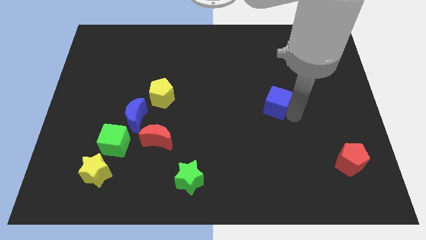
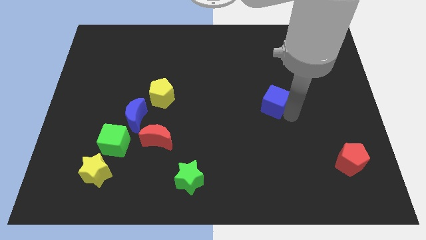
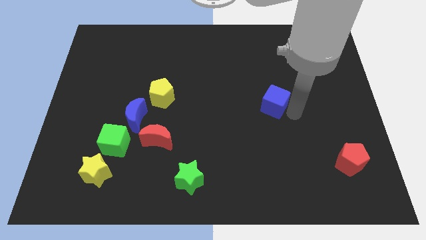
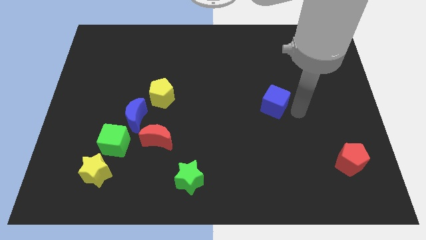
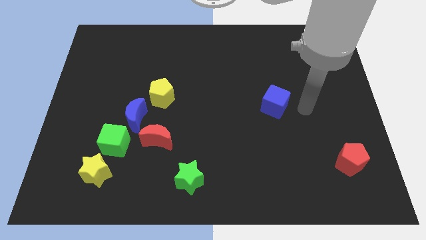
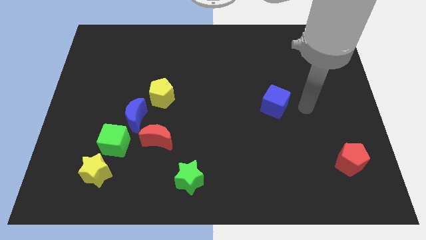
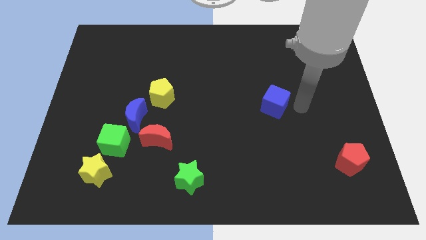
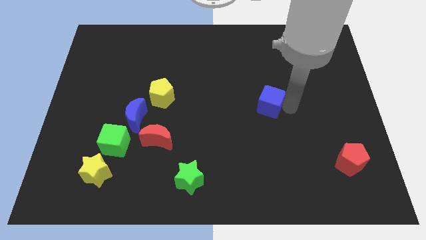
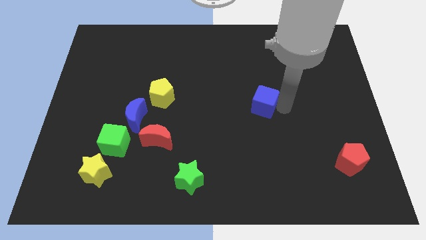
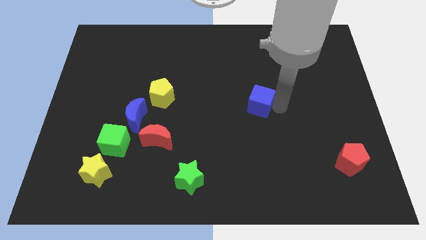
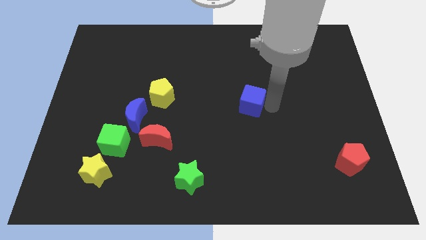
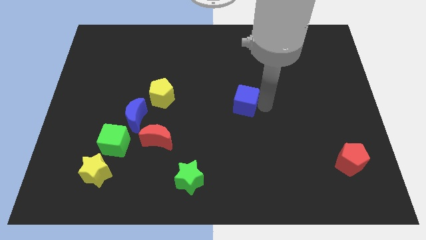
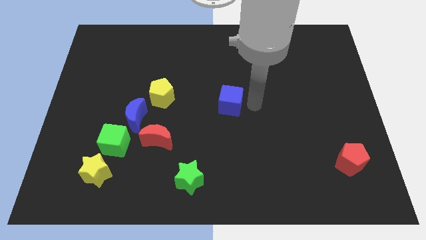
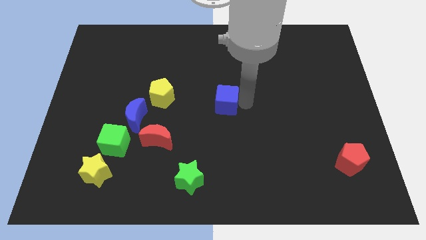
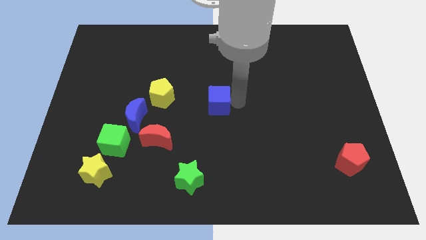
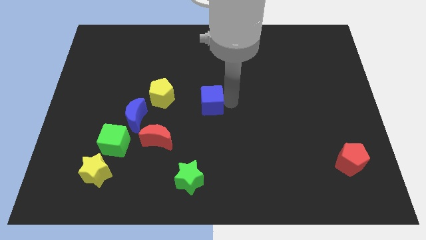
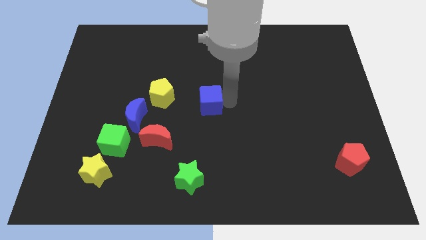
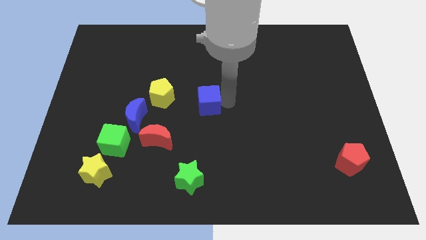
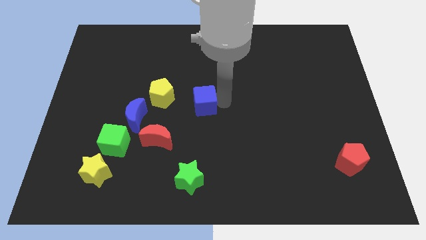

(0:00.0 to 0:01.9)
move the blue cube to the center of the board

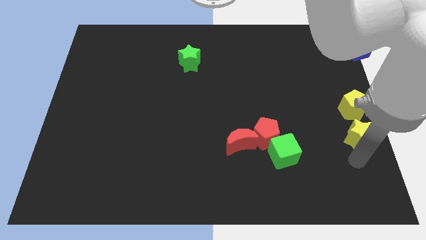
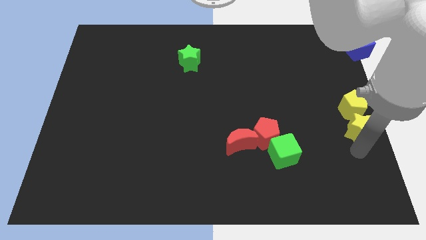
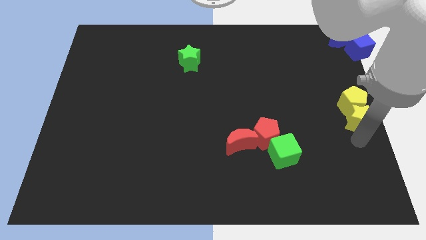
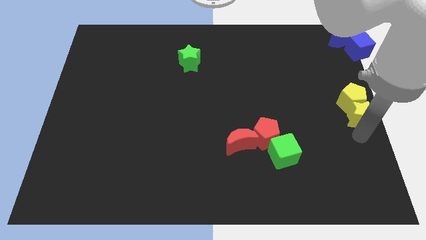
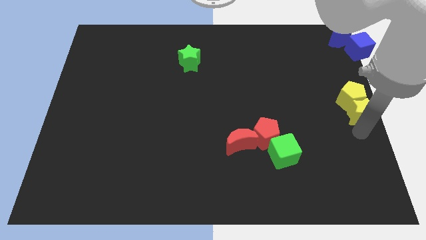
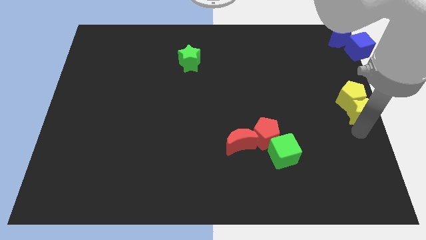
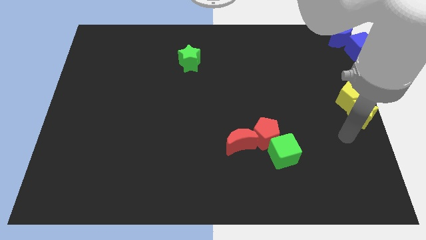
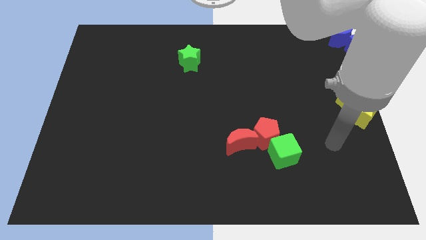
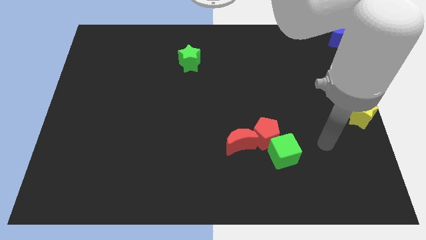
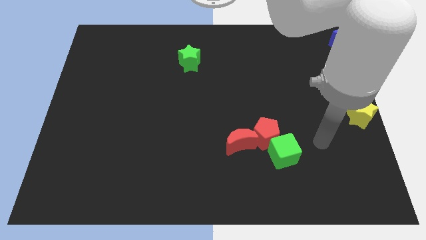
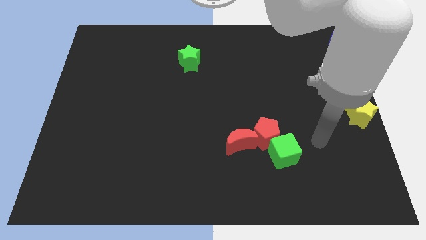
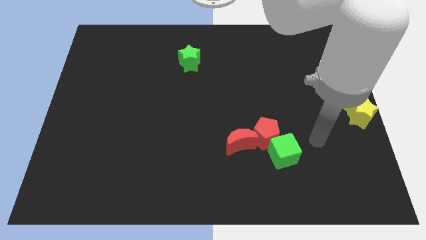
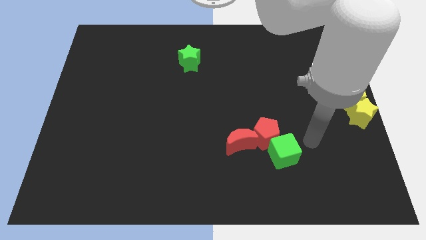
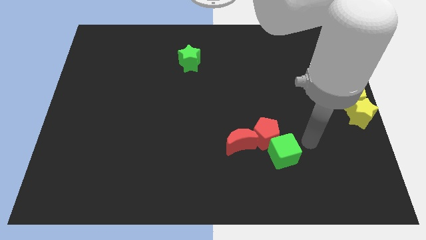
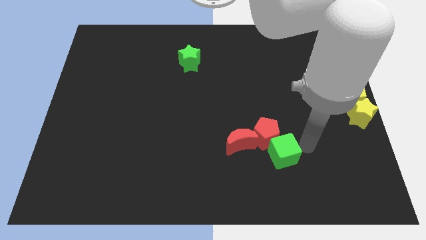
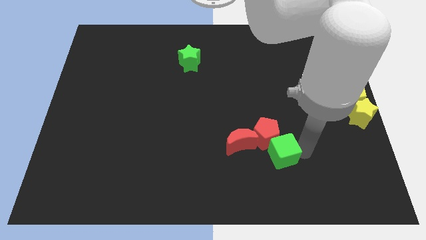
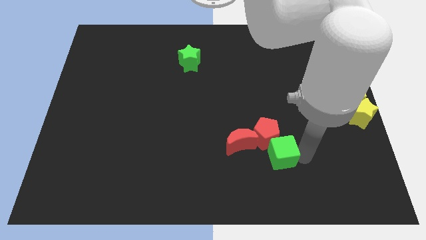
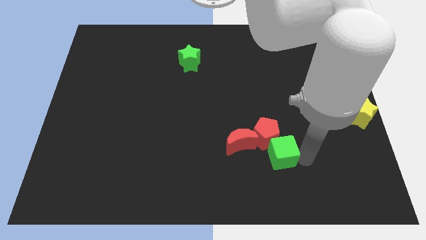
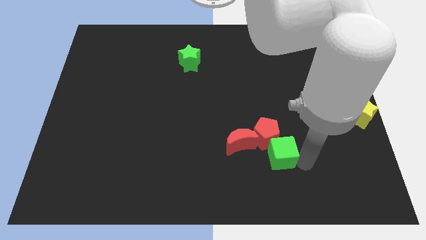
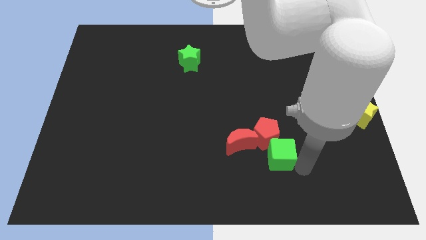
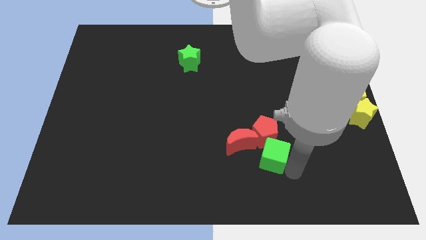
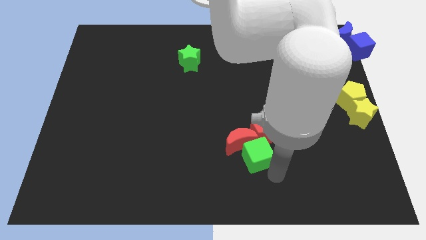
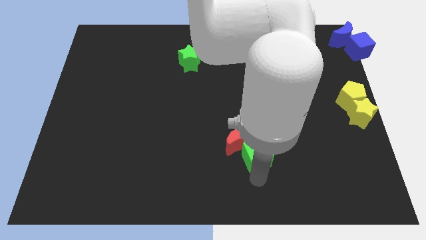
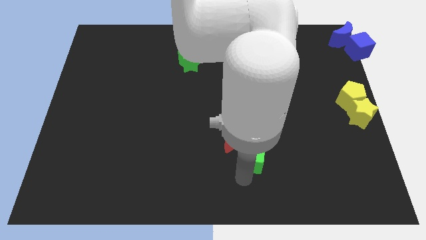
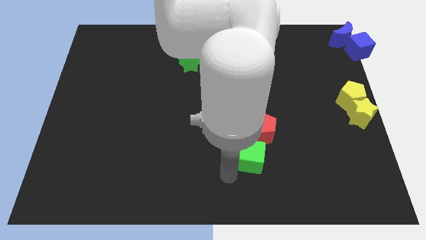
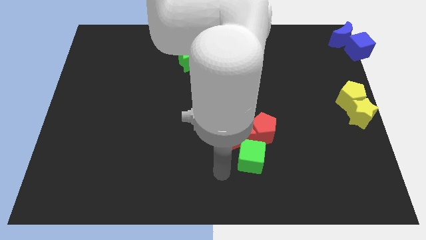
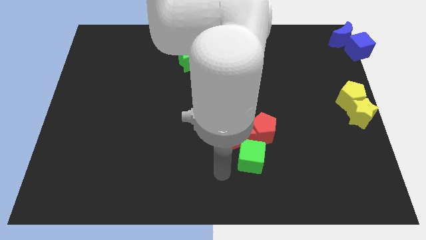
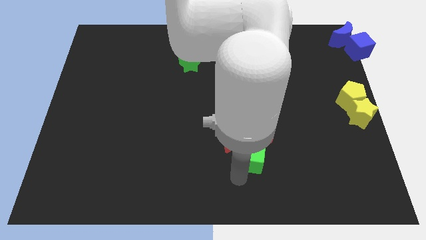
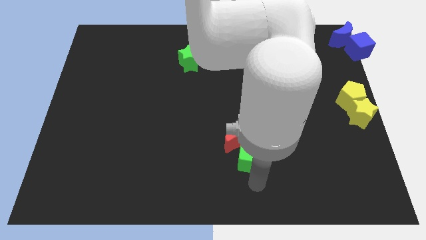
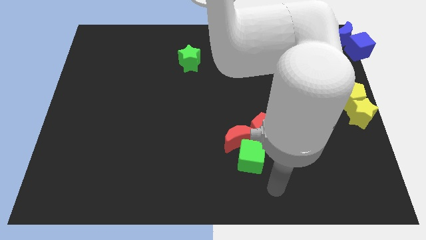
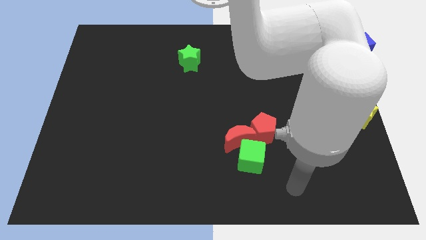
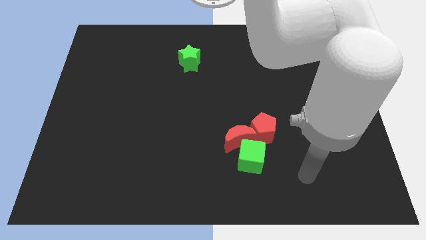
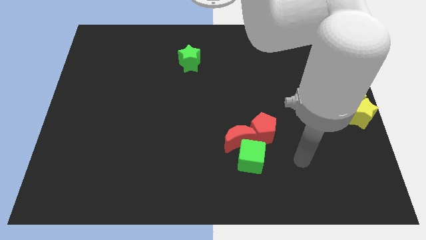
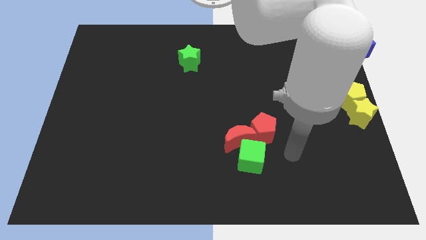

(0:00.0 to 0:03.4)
slightly push the green cube at the bottom of the red crescent

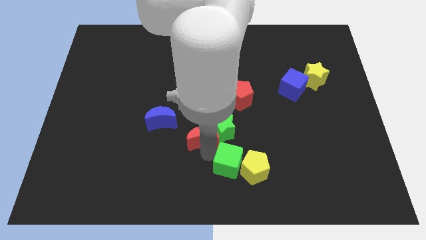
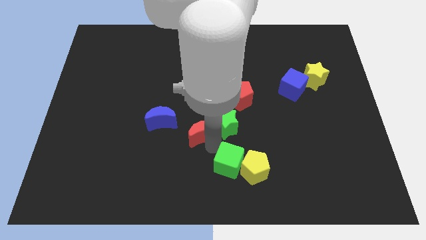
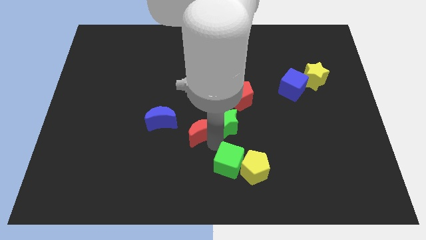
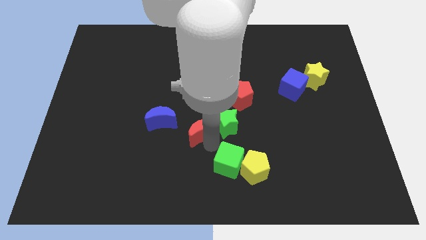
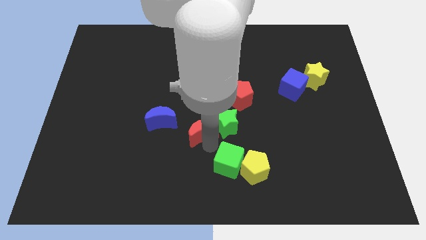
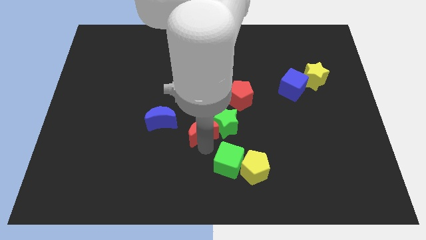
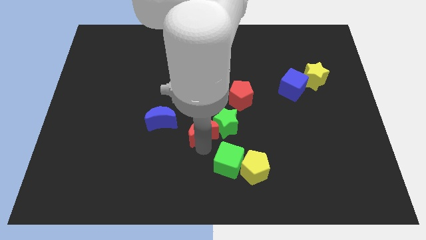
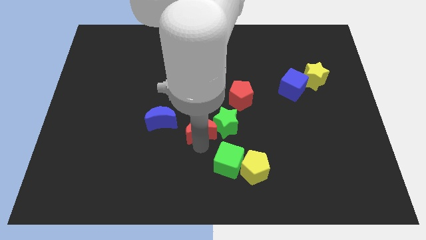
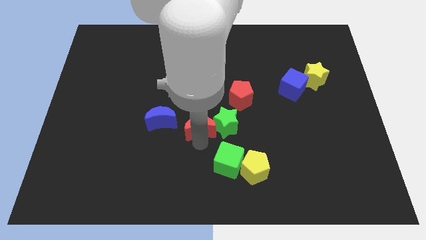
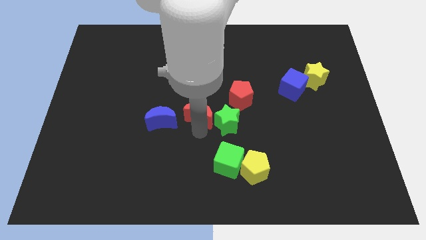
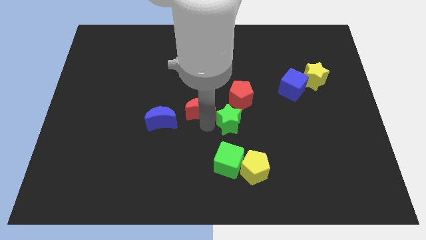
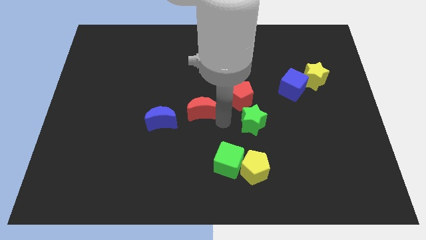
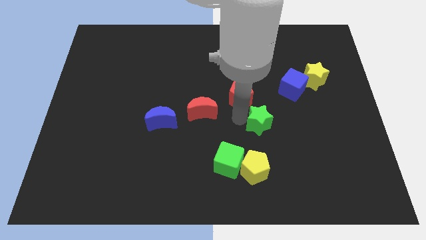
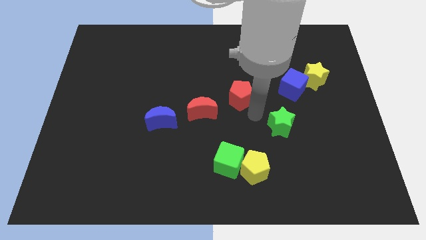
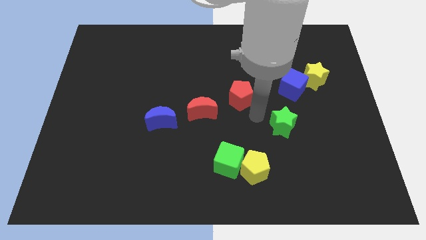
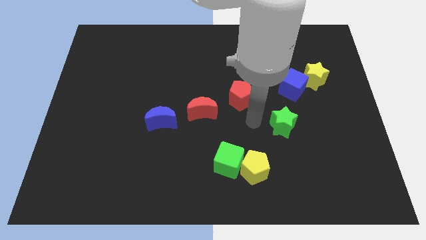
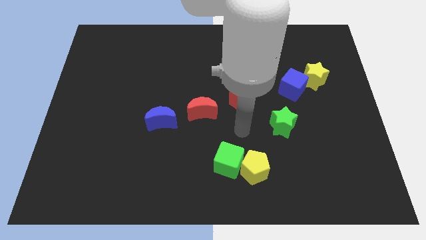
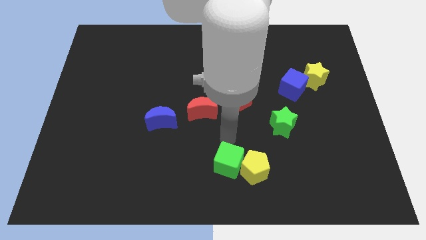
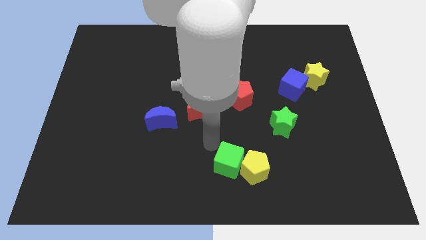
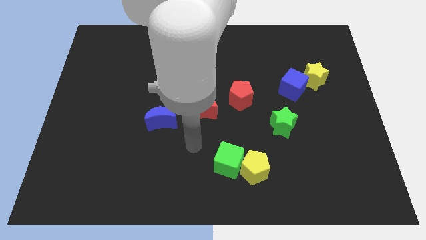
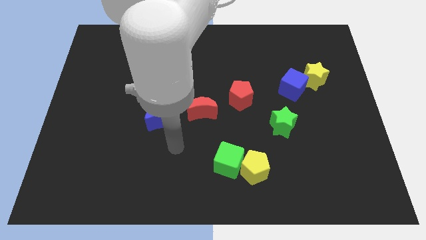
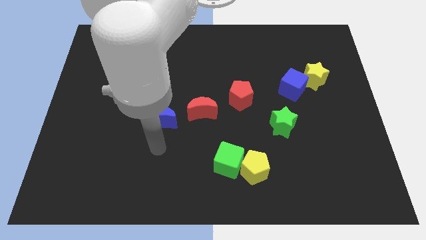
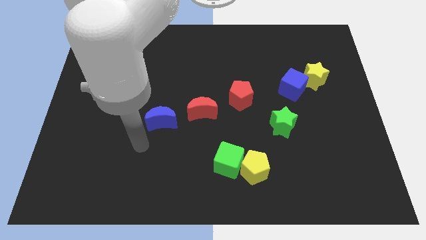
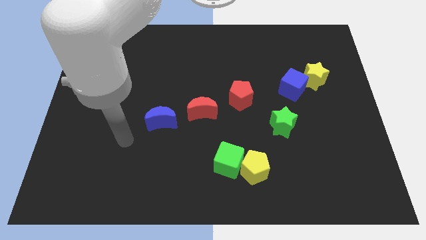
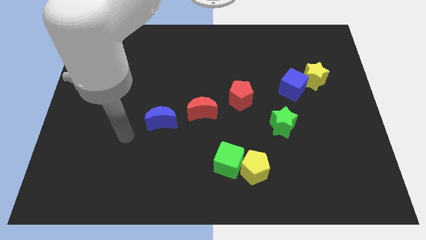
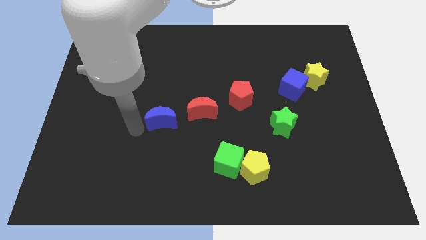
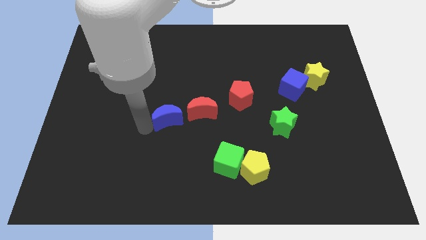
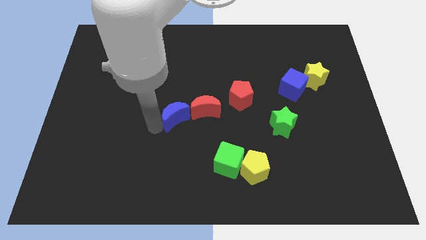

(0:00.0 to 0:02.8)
separate red moon and green star

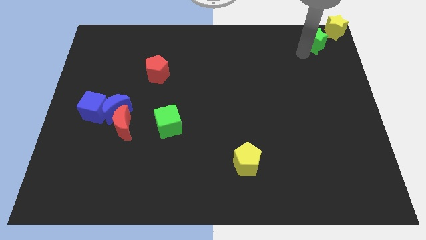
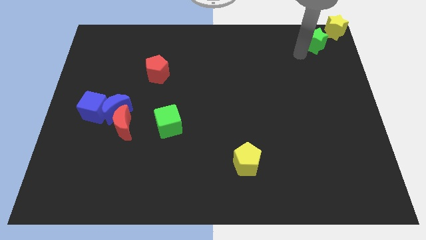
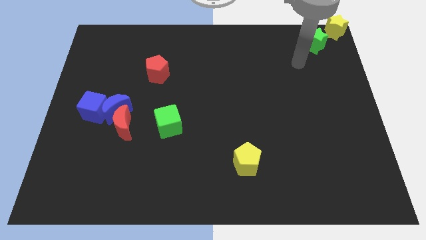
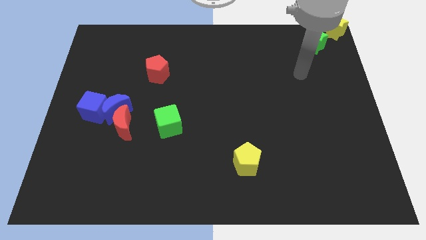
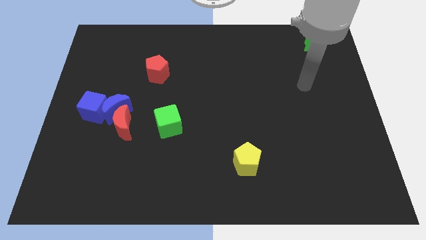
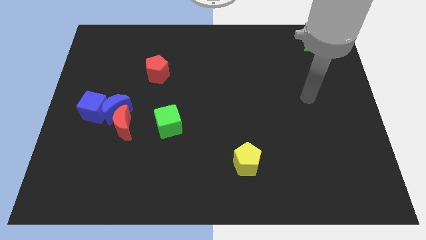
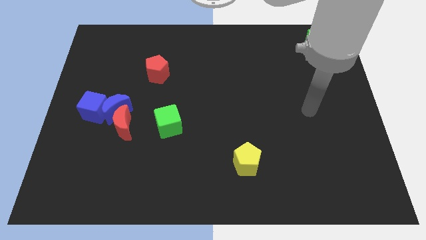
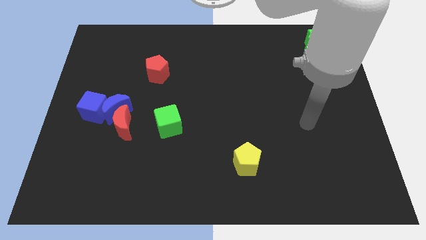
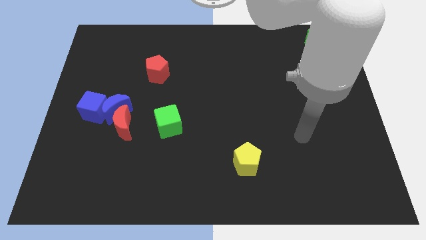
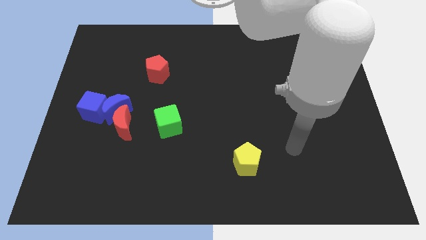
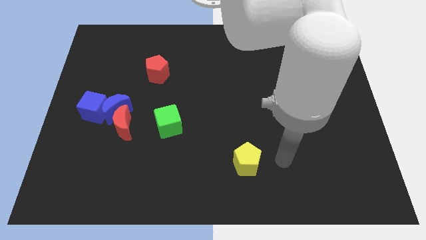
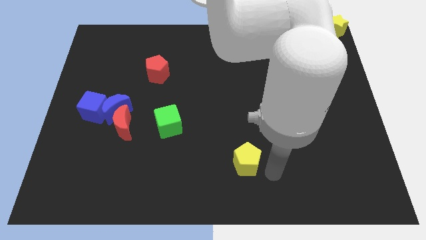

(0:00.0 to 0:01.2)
move your arm right to the yellow pentagon
